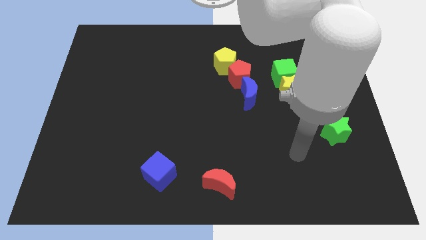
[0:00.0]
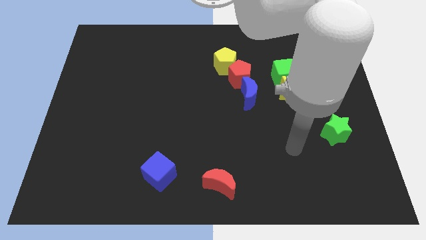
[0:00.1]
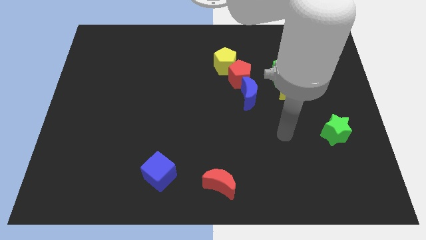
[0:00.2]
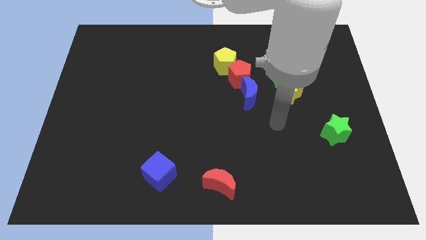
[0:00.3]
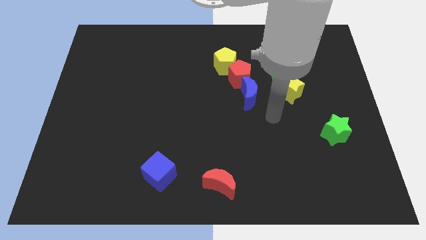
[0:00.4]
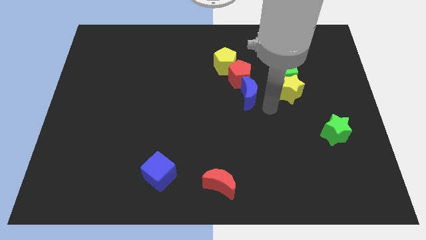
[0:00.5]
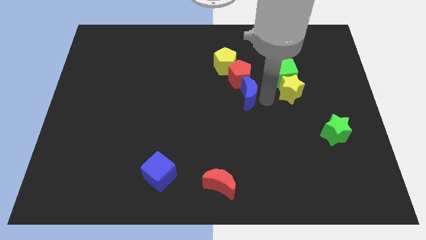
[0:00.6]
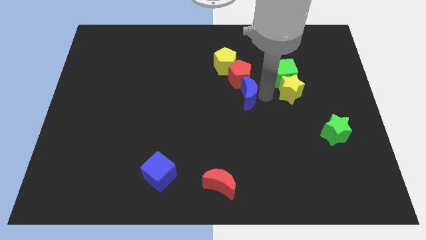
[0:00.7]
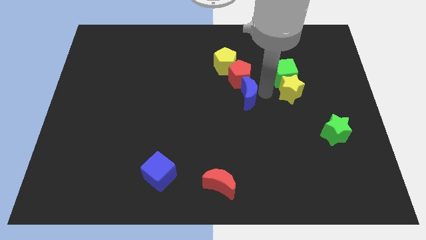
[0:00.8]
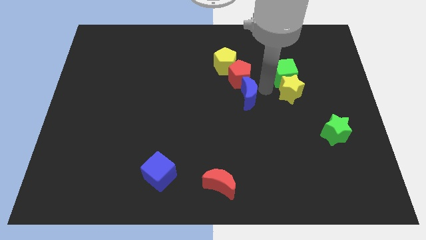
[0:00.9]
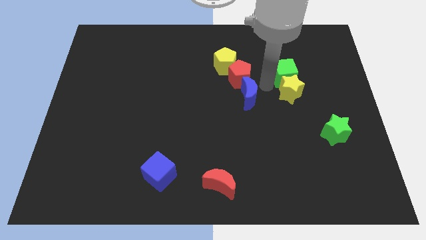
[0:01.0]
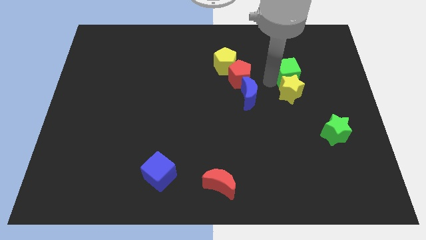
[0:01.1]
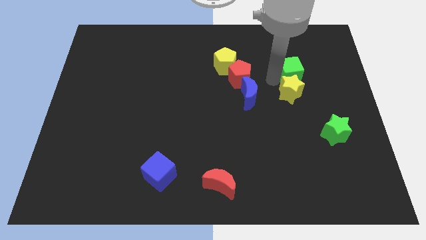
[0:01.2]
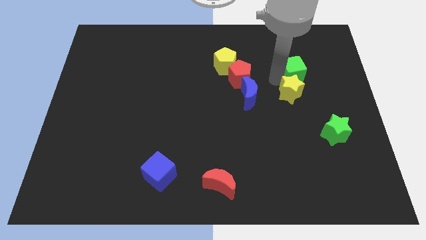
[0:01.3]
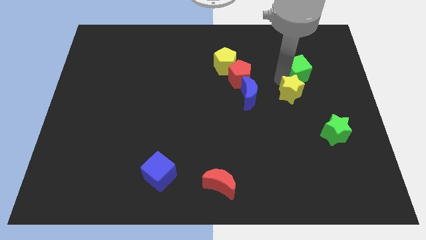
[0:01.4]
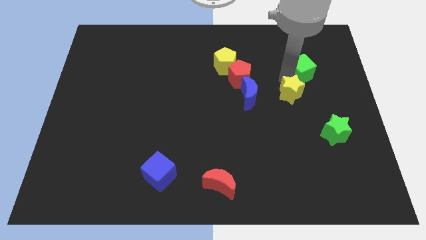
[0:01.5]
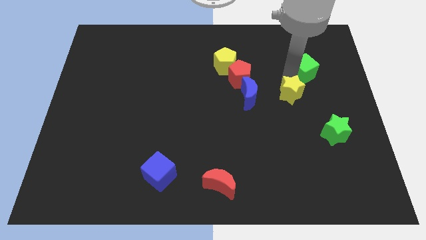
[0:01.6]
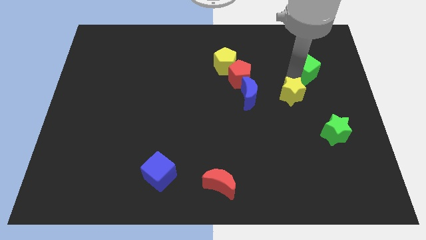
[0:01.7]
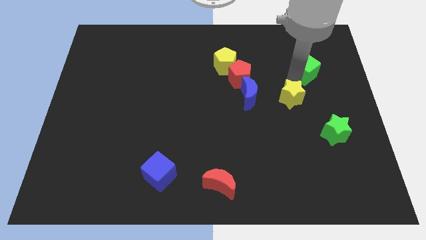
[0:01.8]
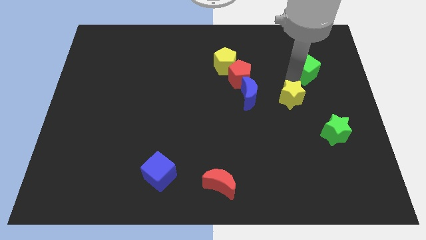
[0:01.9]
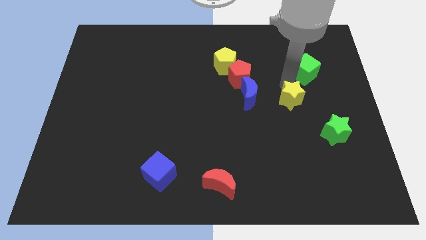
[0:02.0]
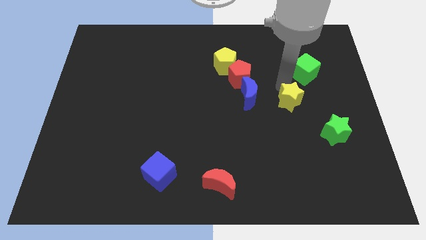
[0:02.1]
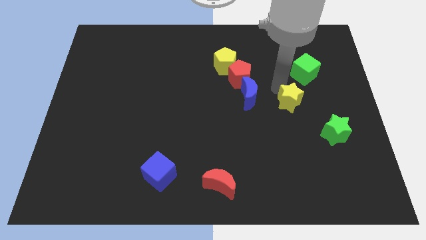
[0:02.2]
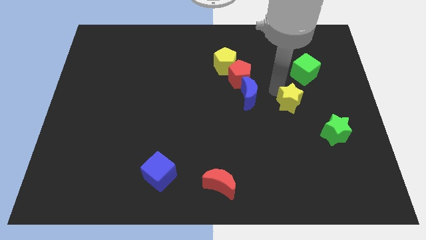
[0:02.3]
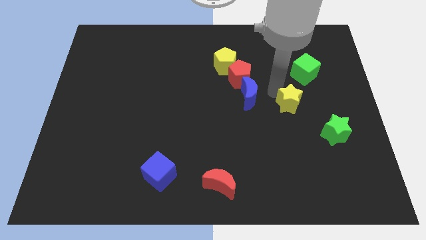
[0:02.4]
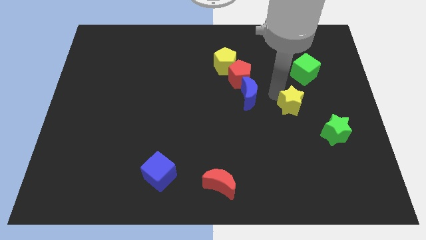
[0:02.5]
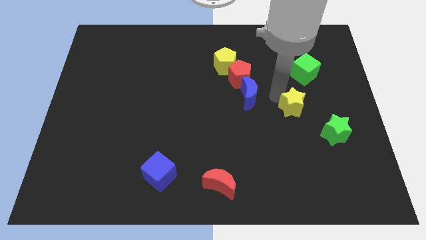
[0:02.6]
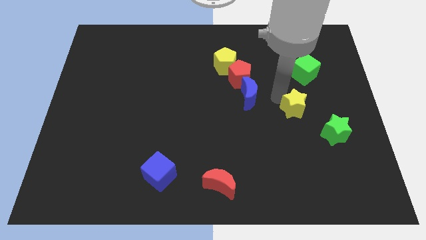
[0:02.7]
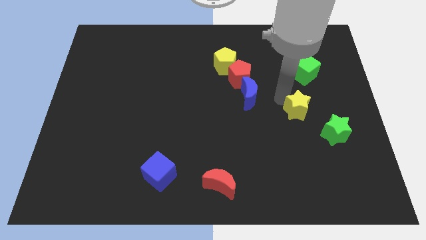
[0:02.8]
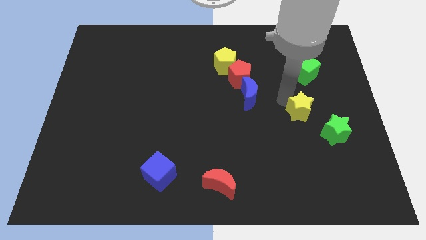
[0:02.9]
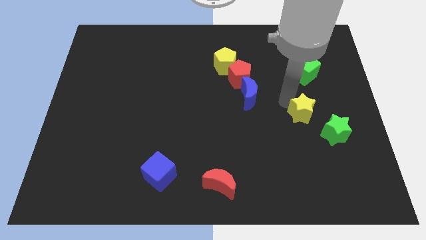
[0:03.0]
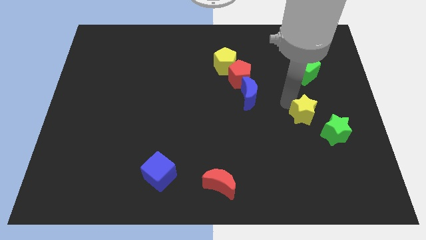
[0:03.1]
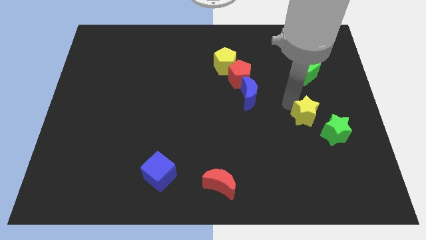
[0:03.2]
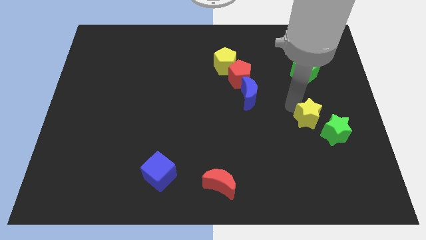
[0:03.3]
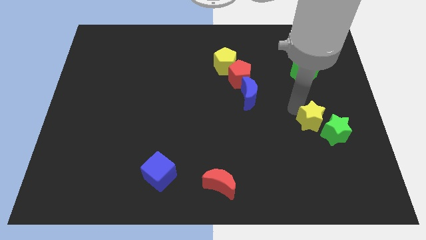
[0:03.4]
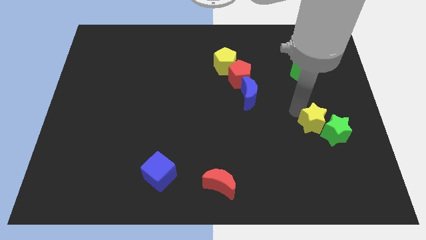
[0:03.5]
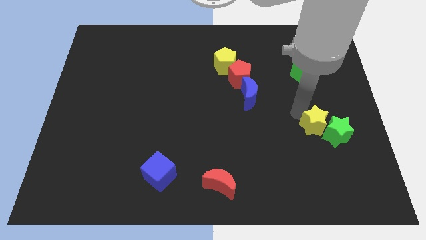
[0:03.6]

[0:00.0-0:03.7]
put the yellow star next to the green star

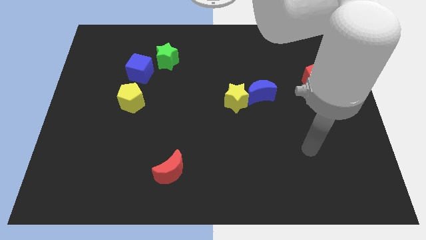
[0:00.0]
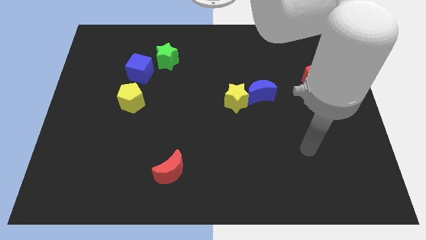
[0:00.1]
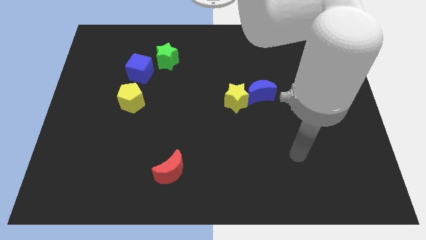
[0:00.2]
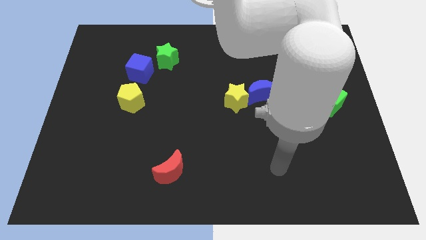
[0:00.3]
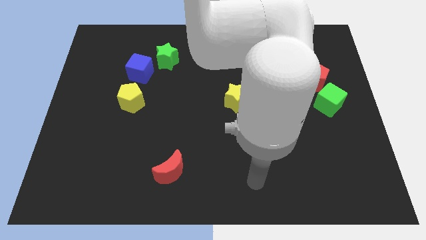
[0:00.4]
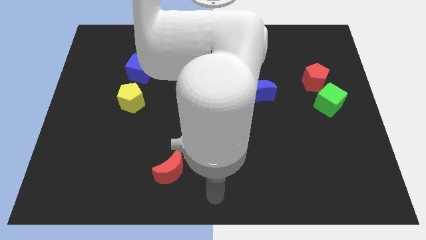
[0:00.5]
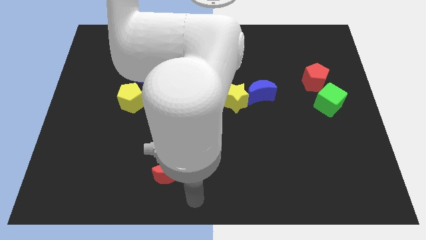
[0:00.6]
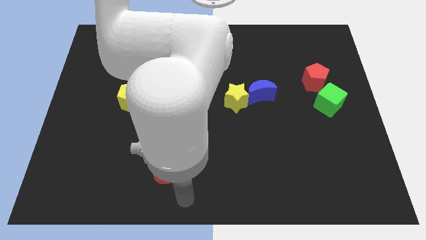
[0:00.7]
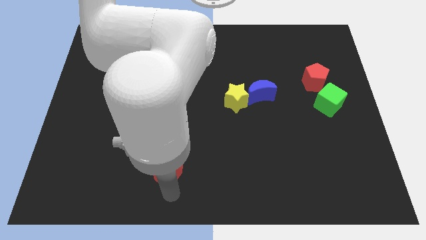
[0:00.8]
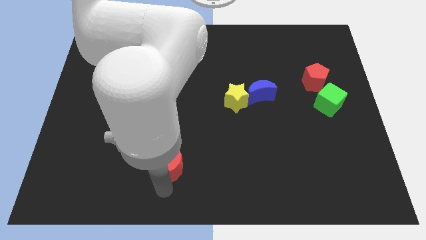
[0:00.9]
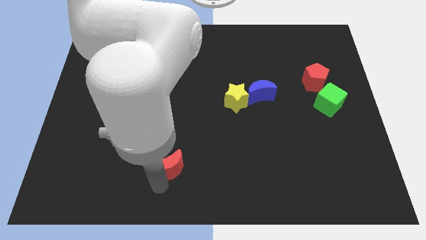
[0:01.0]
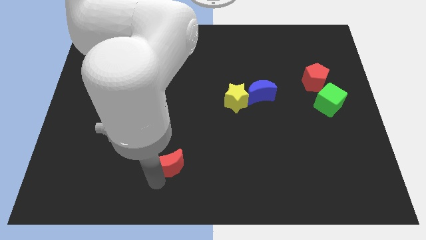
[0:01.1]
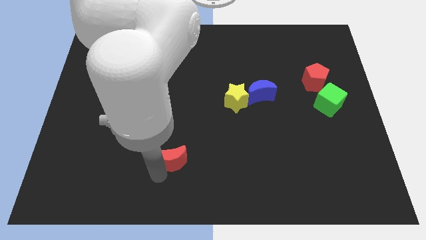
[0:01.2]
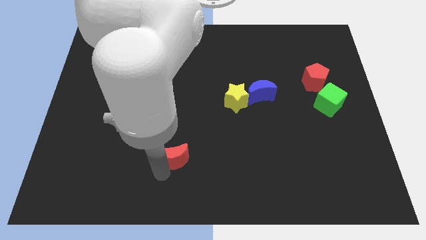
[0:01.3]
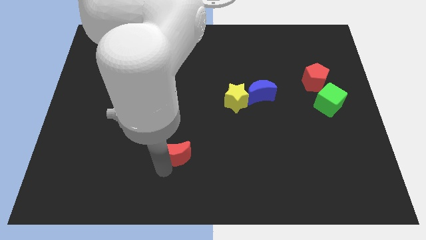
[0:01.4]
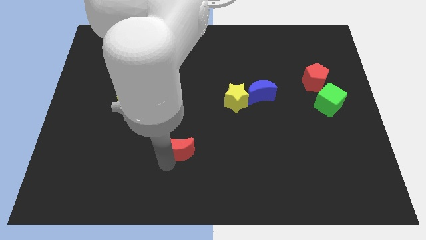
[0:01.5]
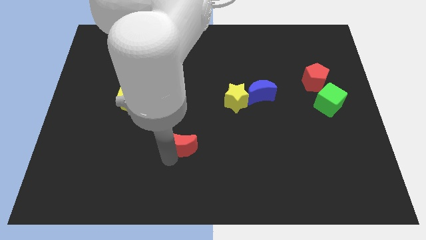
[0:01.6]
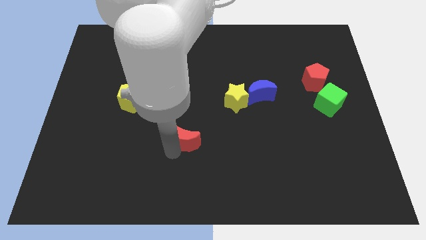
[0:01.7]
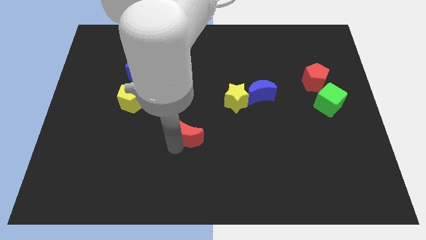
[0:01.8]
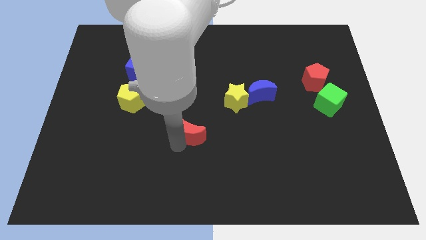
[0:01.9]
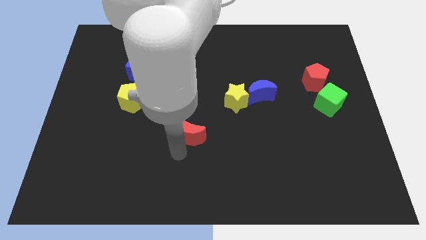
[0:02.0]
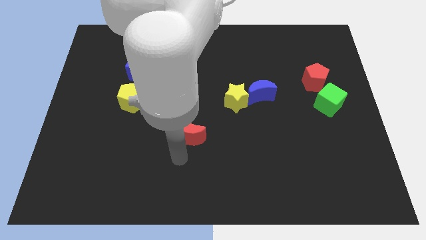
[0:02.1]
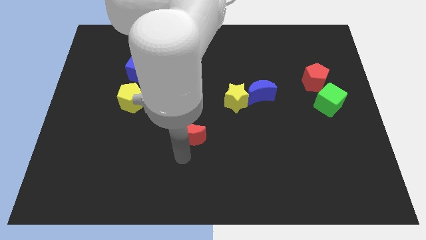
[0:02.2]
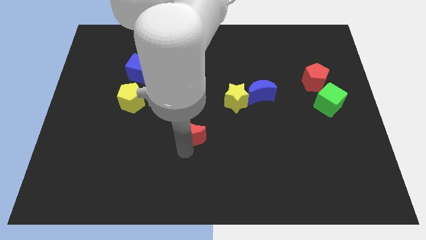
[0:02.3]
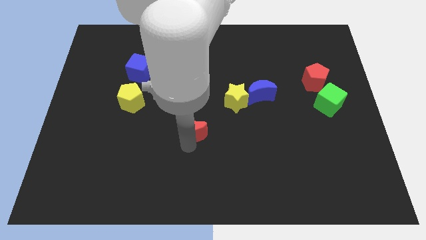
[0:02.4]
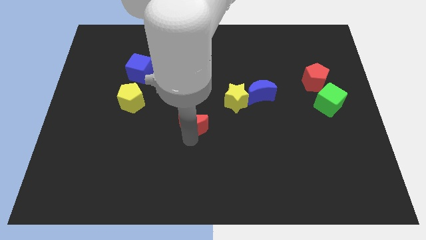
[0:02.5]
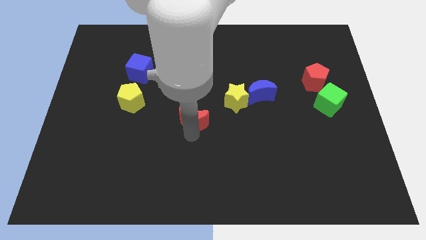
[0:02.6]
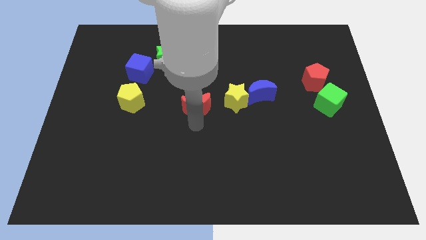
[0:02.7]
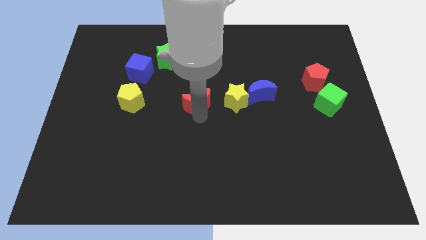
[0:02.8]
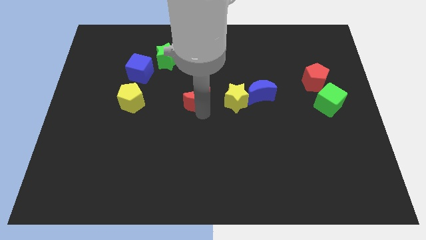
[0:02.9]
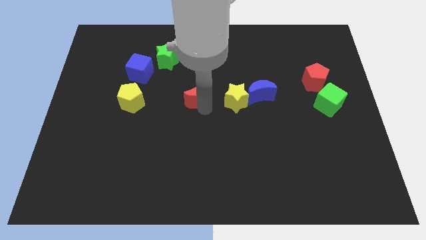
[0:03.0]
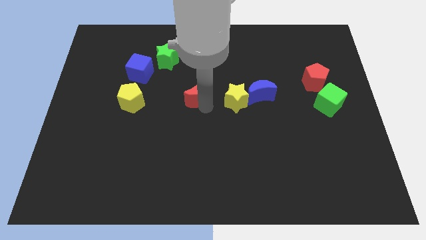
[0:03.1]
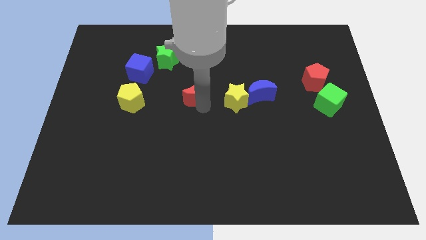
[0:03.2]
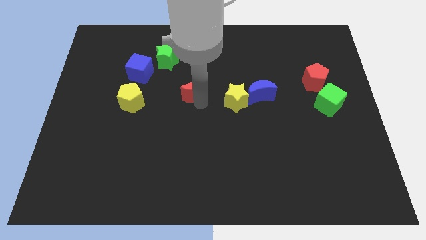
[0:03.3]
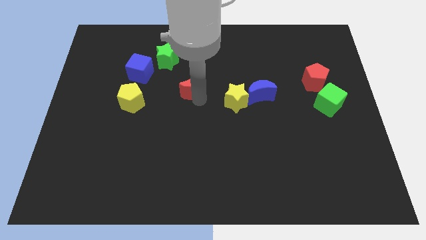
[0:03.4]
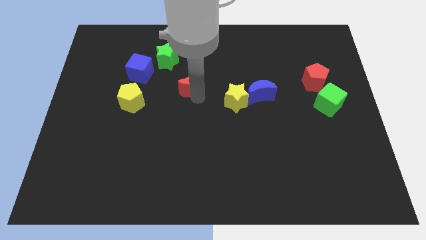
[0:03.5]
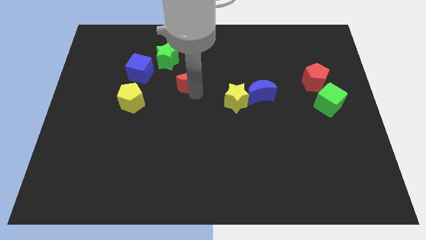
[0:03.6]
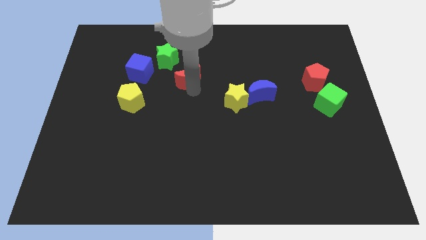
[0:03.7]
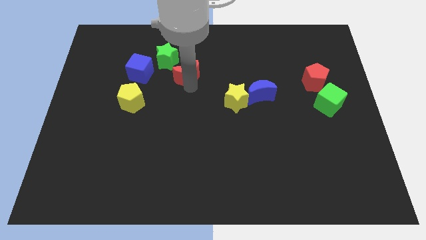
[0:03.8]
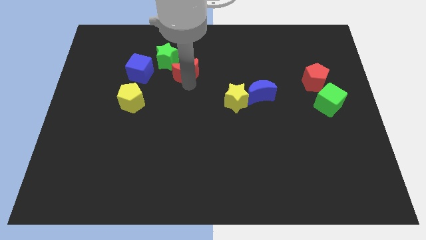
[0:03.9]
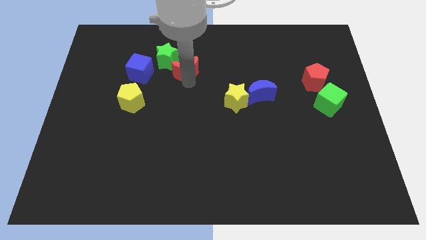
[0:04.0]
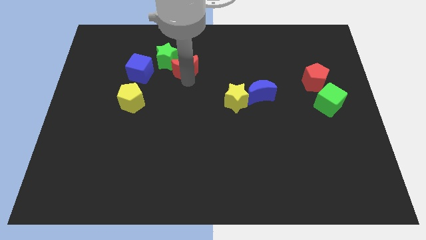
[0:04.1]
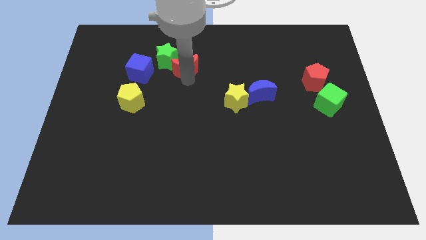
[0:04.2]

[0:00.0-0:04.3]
move the red moon towards the green star
